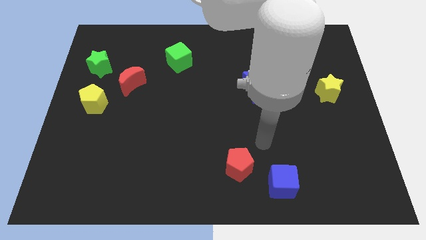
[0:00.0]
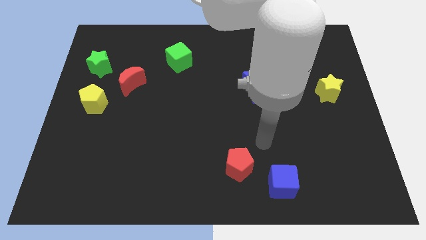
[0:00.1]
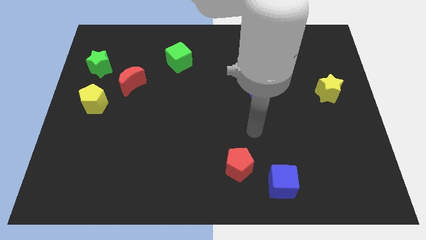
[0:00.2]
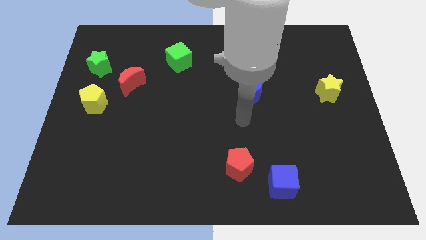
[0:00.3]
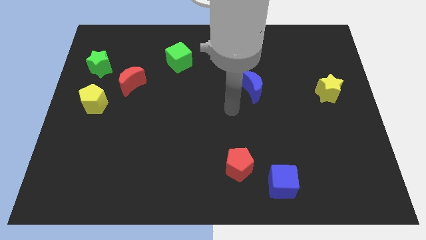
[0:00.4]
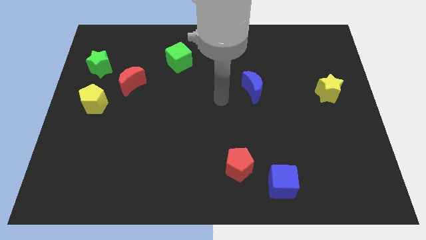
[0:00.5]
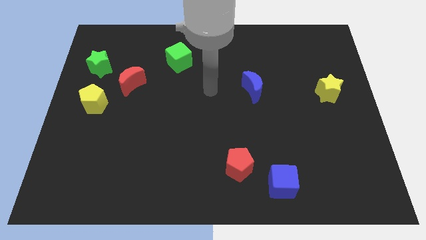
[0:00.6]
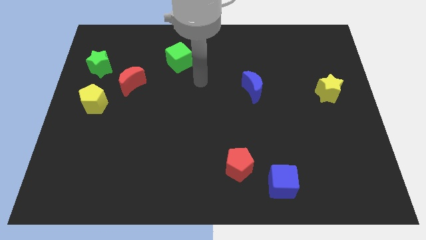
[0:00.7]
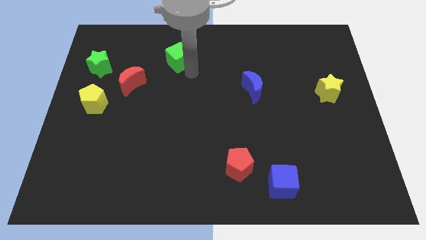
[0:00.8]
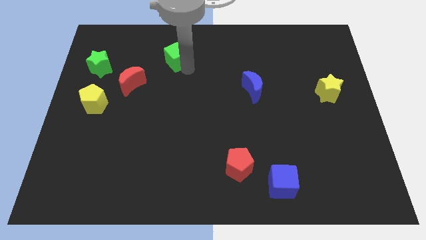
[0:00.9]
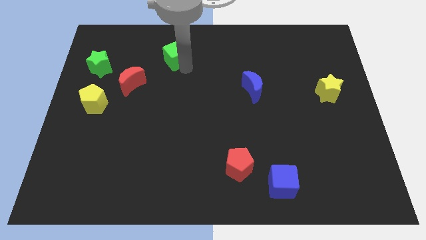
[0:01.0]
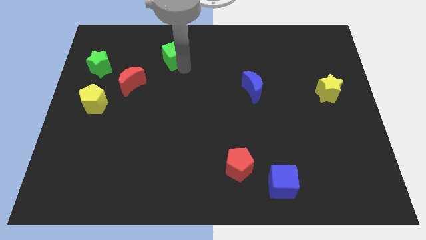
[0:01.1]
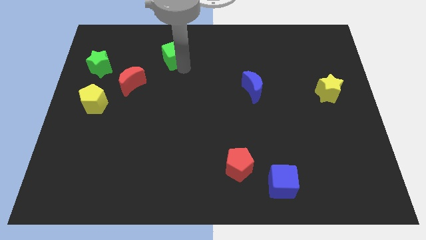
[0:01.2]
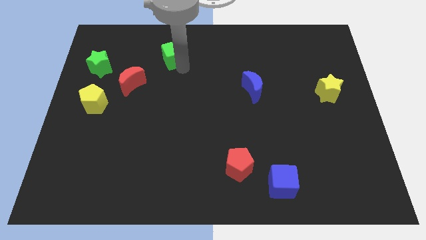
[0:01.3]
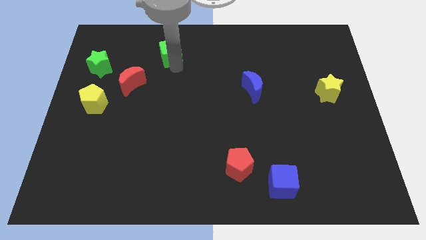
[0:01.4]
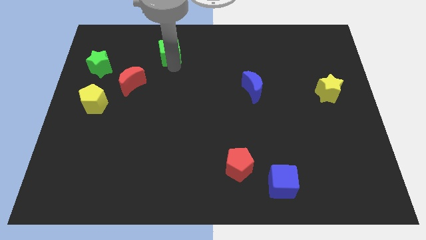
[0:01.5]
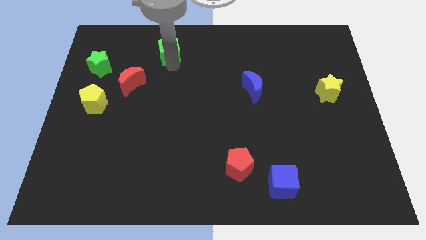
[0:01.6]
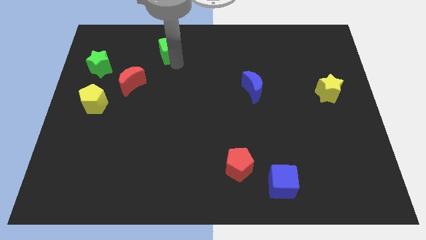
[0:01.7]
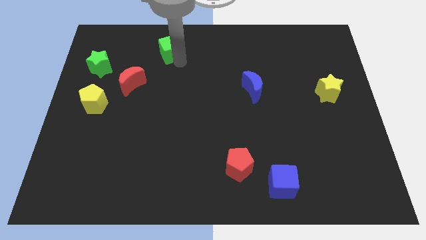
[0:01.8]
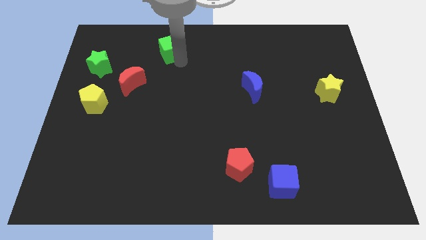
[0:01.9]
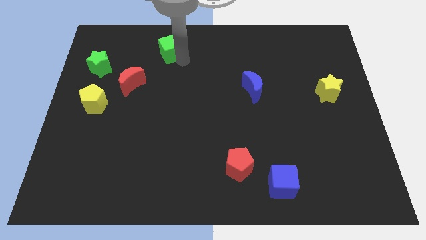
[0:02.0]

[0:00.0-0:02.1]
slightly push the green cube towards the top side of the board

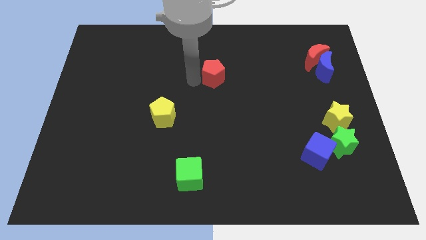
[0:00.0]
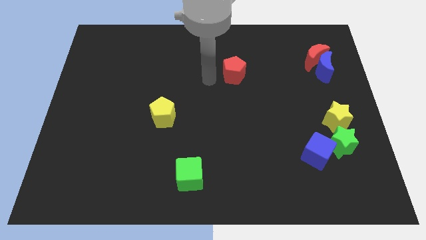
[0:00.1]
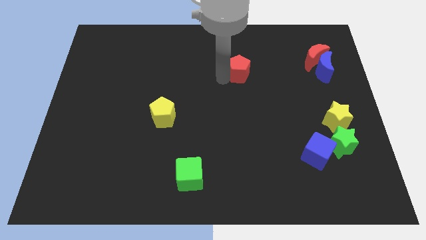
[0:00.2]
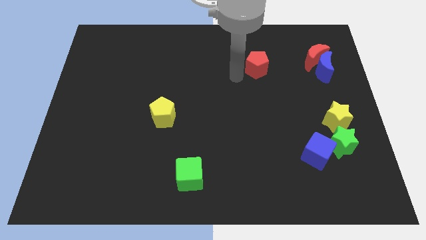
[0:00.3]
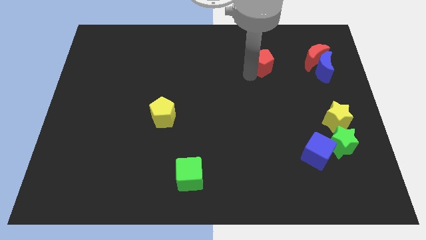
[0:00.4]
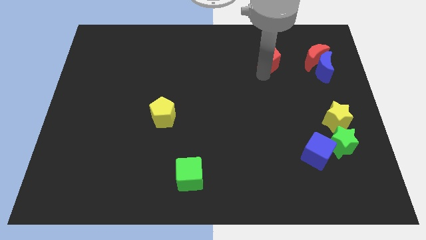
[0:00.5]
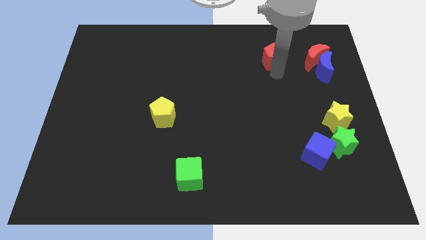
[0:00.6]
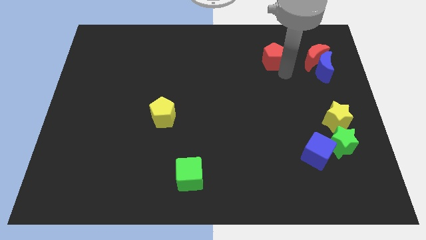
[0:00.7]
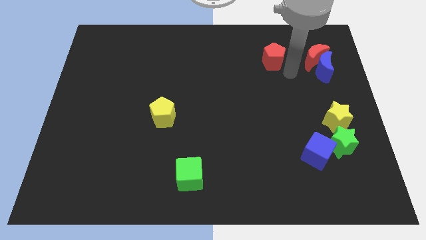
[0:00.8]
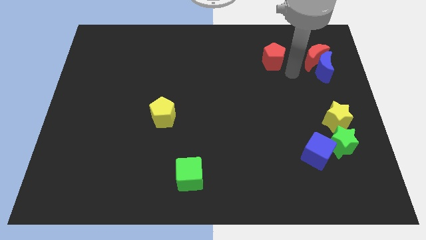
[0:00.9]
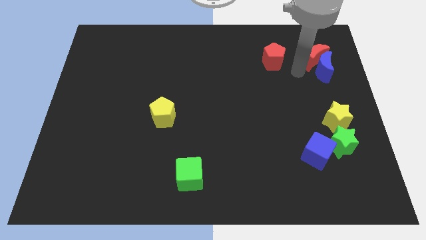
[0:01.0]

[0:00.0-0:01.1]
move red pentagon to the center

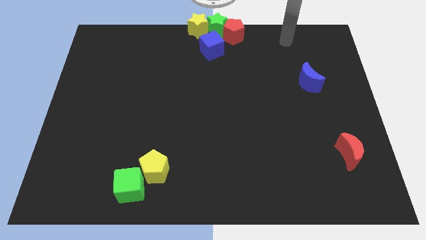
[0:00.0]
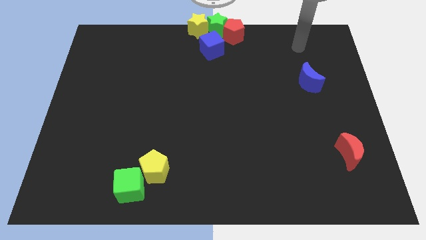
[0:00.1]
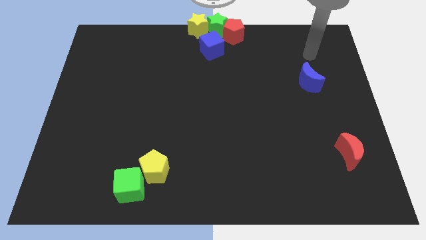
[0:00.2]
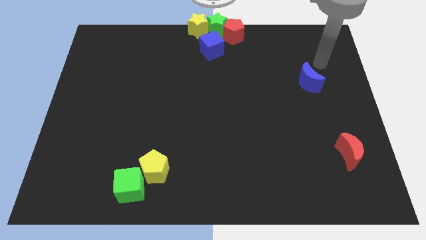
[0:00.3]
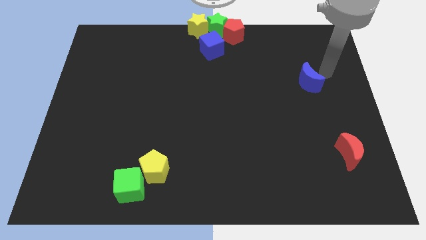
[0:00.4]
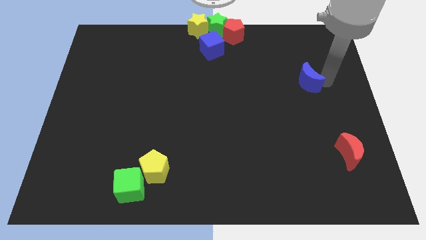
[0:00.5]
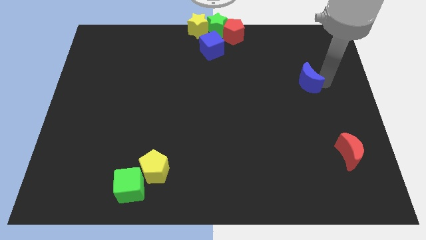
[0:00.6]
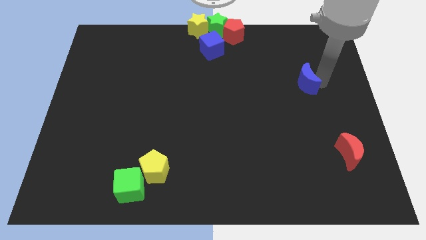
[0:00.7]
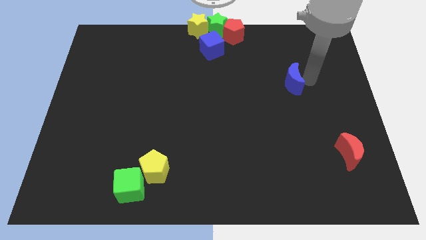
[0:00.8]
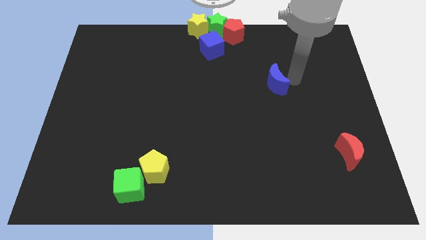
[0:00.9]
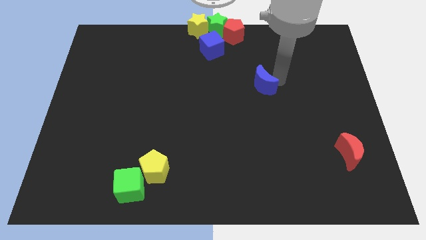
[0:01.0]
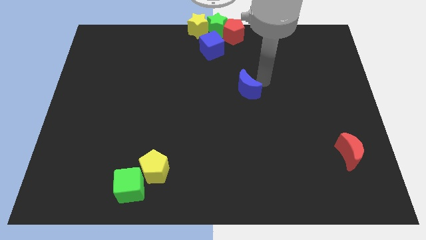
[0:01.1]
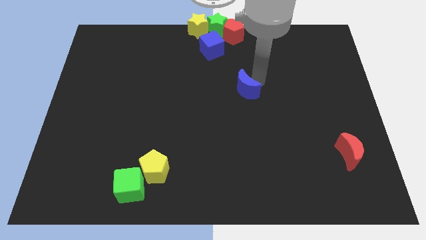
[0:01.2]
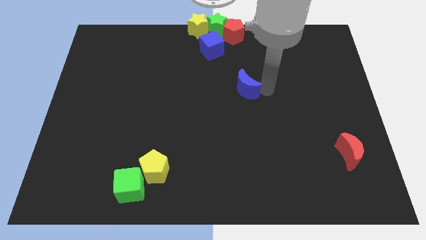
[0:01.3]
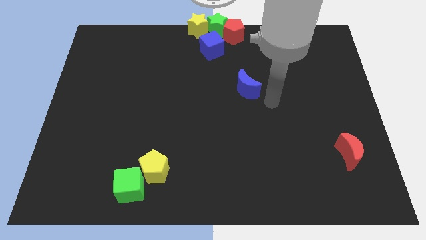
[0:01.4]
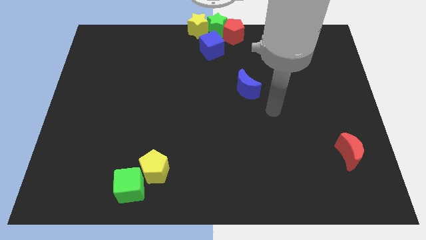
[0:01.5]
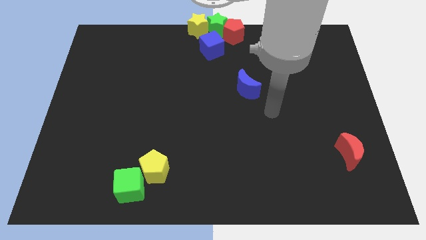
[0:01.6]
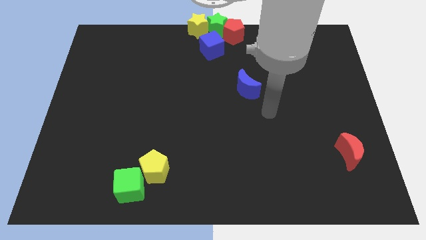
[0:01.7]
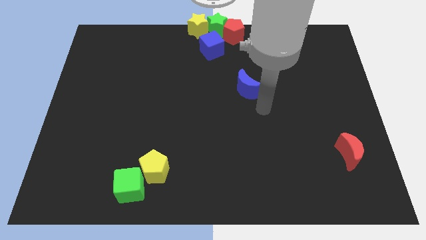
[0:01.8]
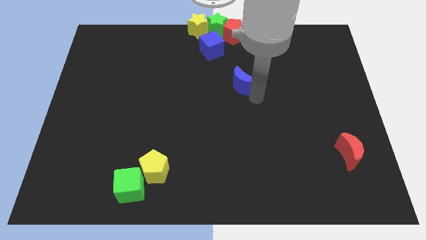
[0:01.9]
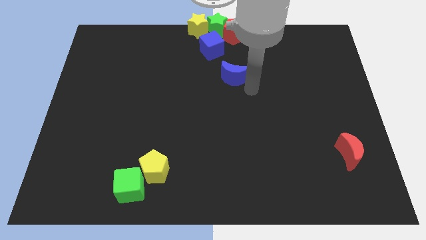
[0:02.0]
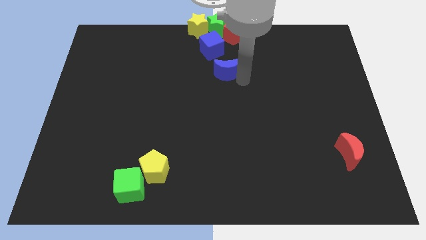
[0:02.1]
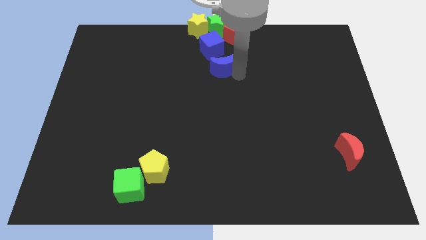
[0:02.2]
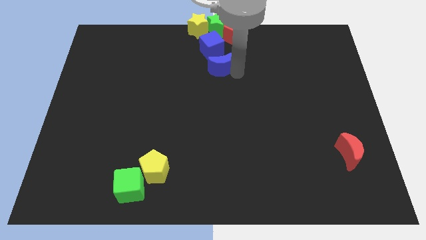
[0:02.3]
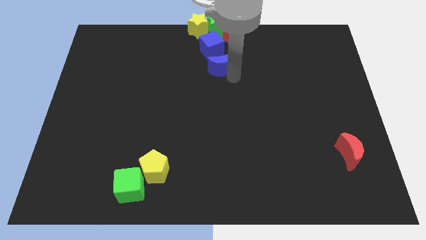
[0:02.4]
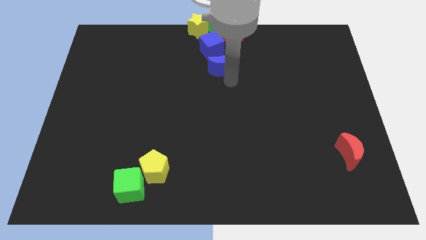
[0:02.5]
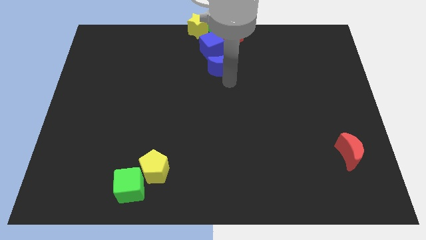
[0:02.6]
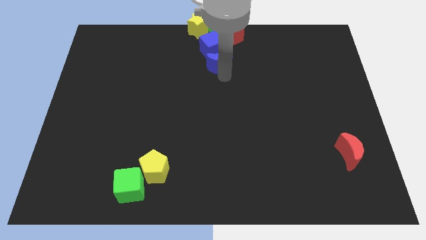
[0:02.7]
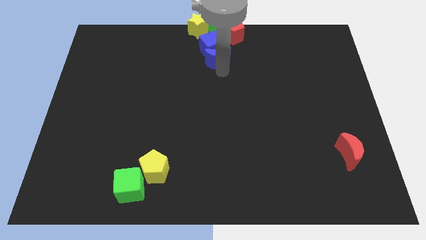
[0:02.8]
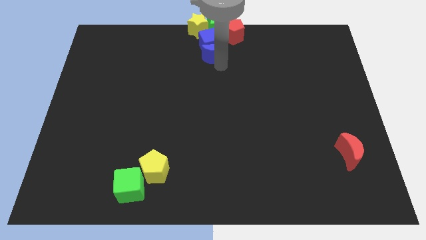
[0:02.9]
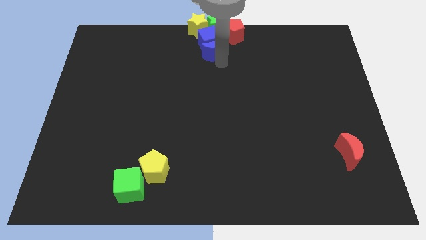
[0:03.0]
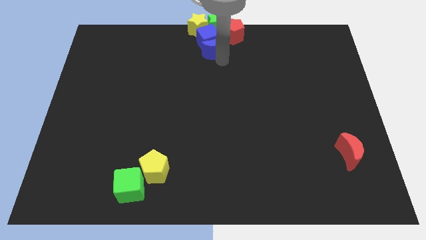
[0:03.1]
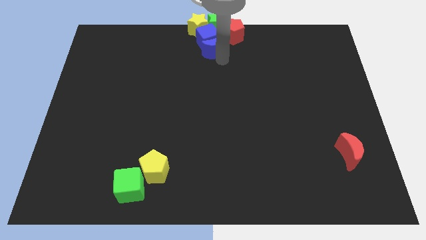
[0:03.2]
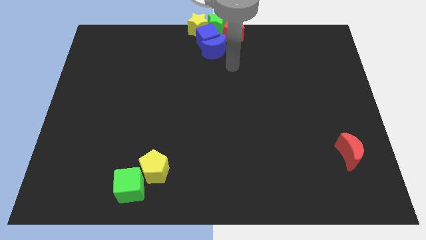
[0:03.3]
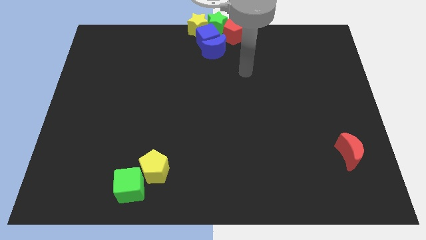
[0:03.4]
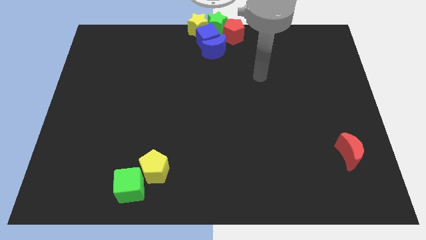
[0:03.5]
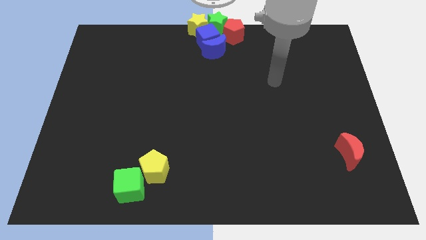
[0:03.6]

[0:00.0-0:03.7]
drag the blue crescent into the blue cube

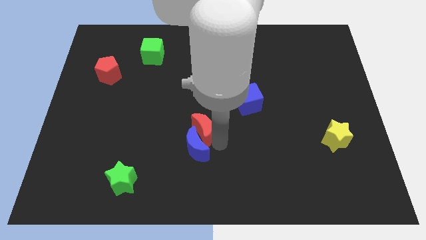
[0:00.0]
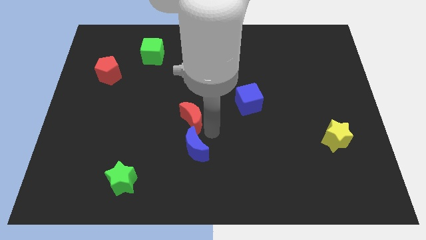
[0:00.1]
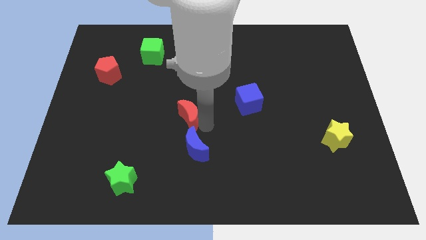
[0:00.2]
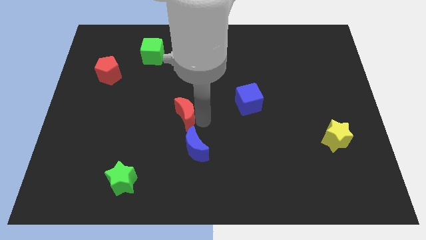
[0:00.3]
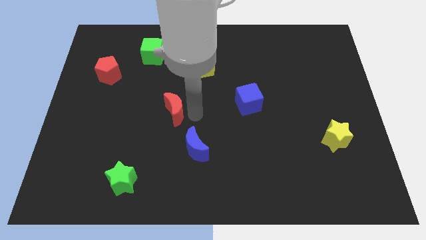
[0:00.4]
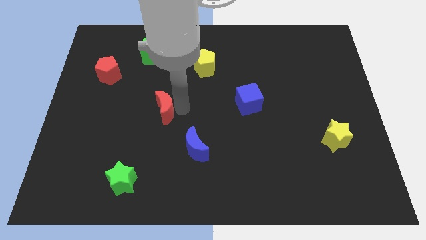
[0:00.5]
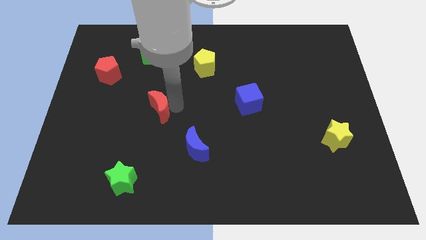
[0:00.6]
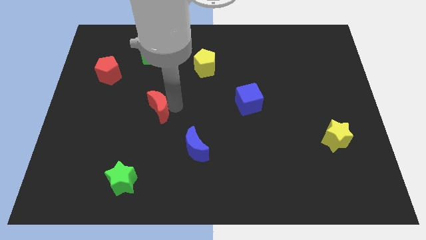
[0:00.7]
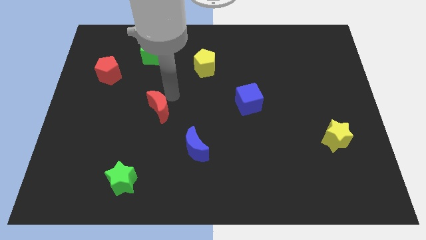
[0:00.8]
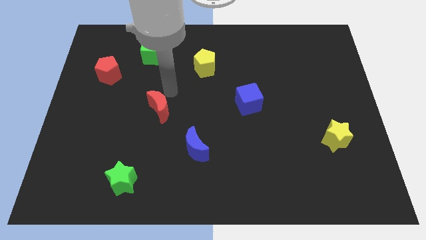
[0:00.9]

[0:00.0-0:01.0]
separate red moon from blue moon

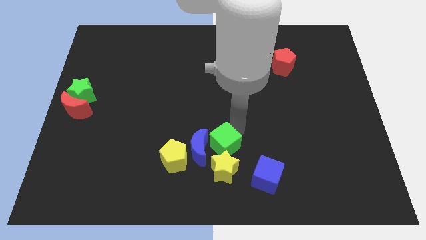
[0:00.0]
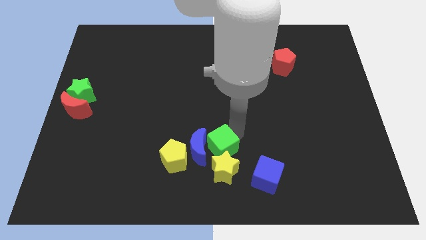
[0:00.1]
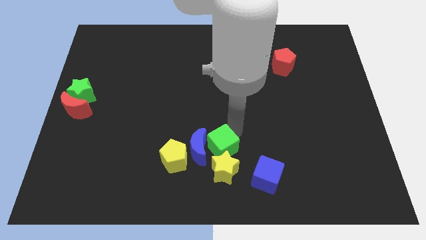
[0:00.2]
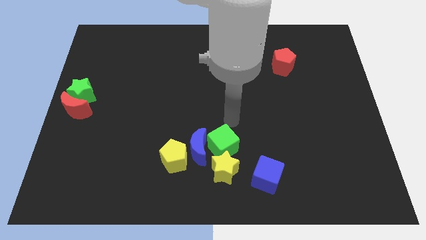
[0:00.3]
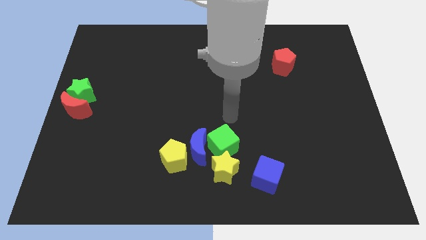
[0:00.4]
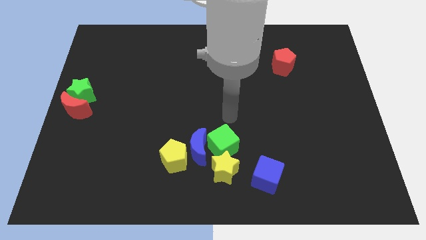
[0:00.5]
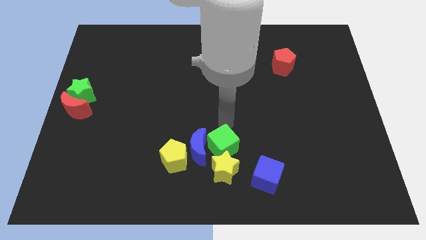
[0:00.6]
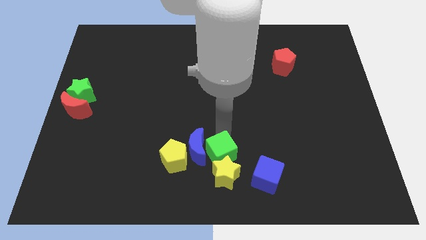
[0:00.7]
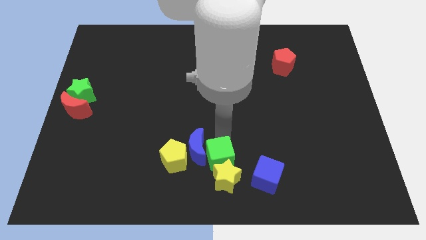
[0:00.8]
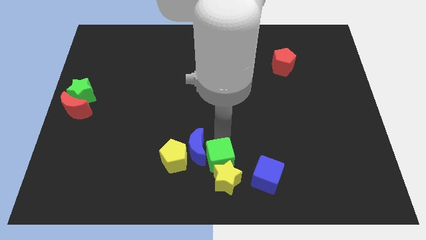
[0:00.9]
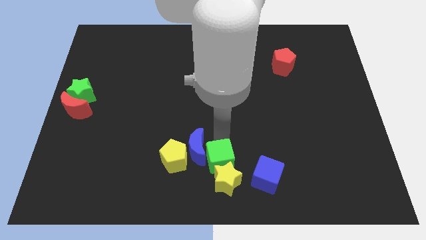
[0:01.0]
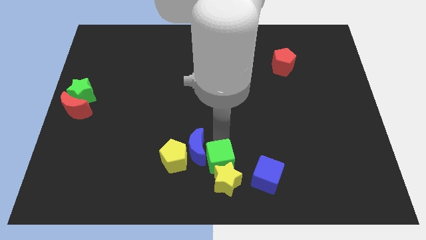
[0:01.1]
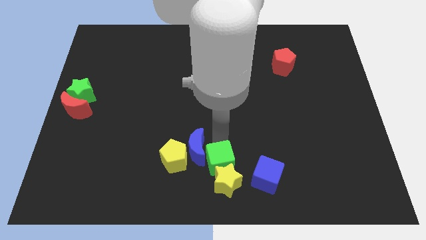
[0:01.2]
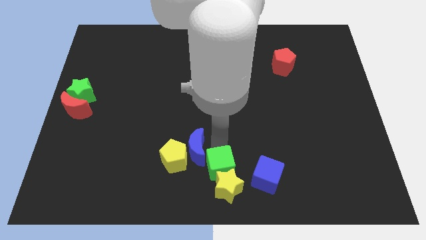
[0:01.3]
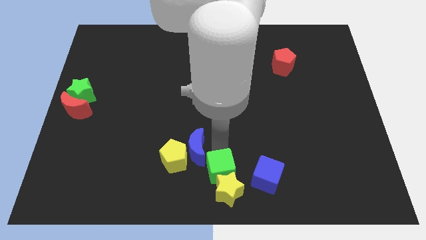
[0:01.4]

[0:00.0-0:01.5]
push the green cube into the yellow star
